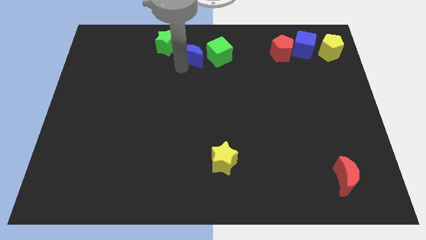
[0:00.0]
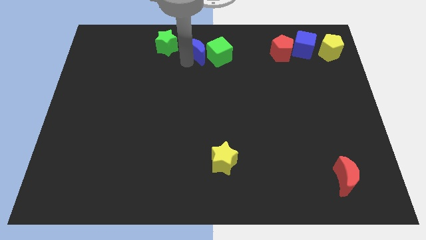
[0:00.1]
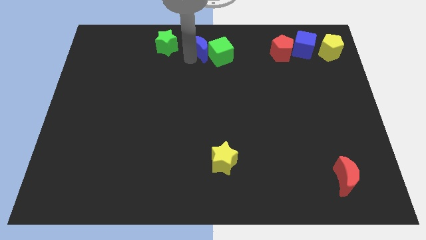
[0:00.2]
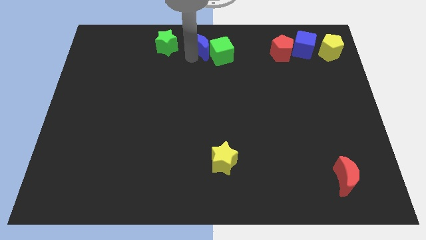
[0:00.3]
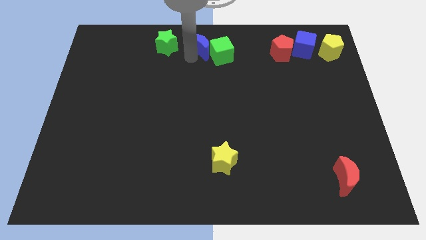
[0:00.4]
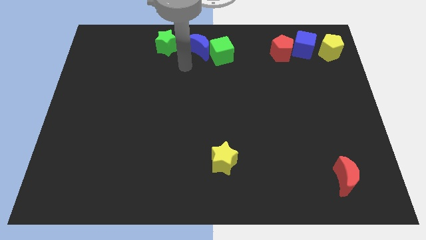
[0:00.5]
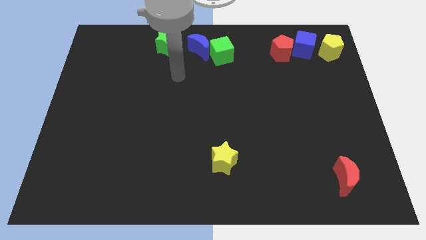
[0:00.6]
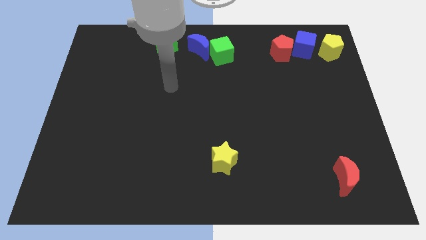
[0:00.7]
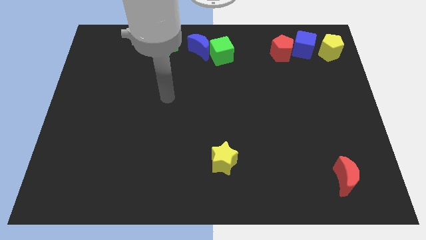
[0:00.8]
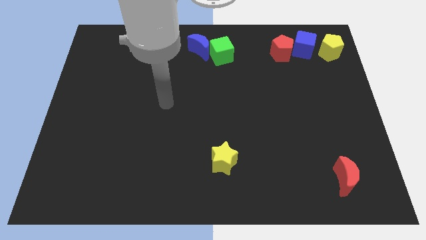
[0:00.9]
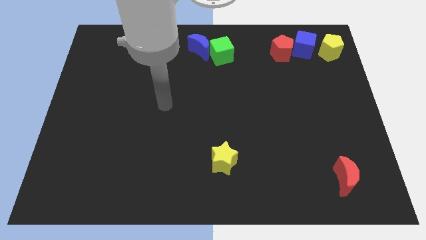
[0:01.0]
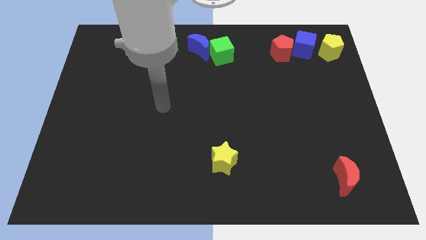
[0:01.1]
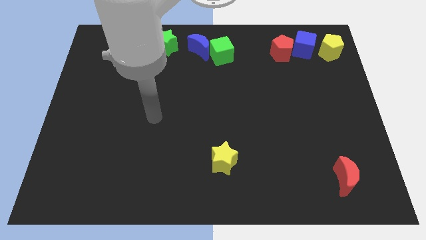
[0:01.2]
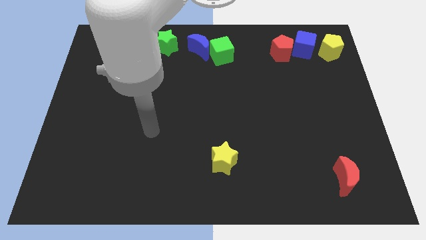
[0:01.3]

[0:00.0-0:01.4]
push the blue moon into the green cube

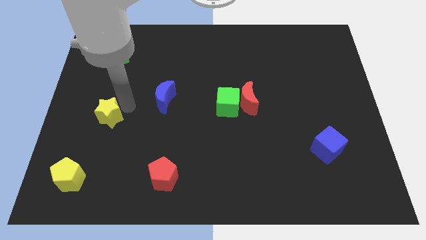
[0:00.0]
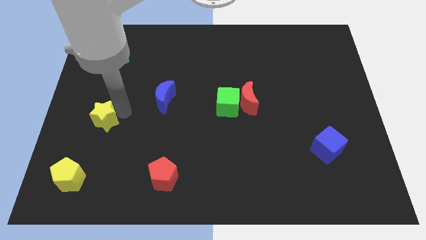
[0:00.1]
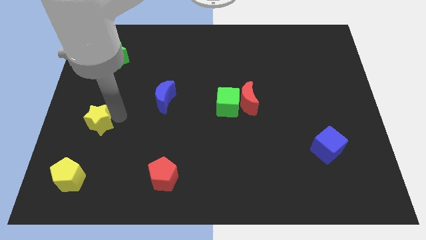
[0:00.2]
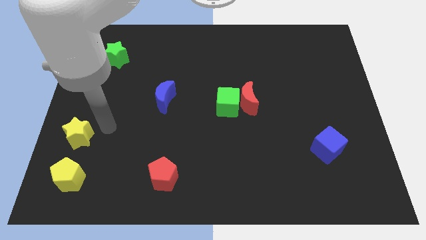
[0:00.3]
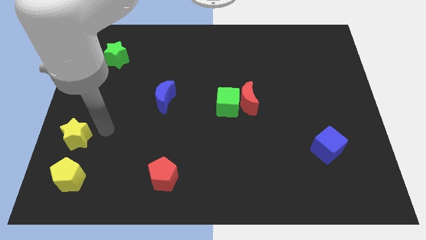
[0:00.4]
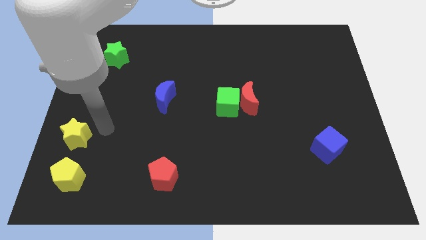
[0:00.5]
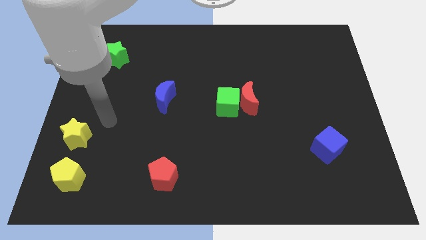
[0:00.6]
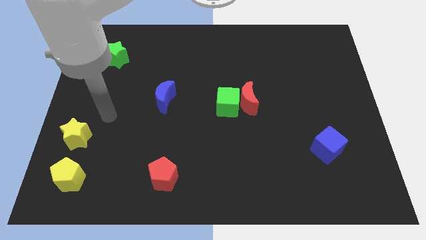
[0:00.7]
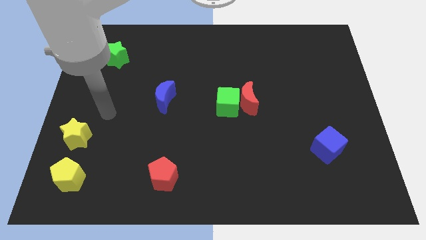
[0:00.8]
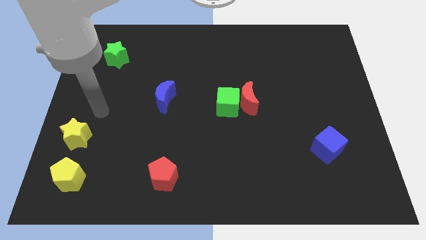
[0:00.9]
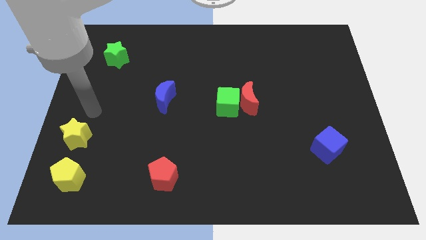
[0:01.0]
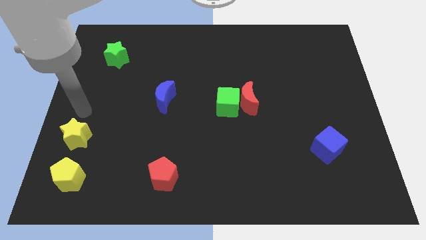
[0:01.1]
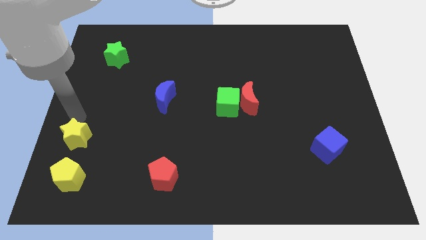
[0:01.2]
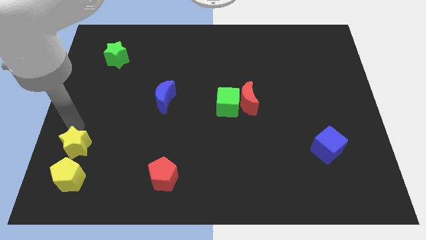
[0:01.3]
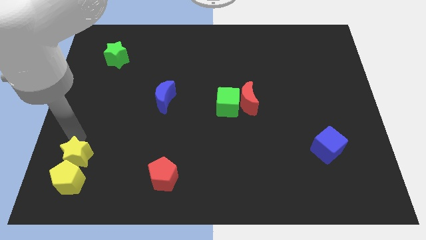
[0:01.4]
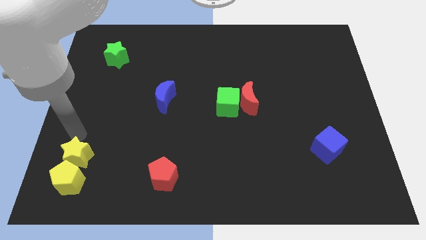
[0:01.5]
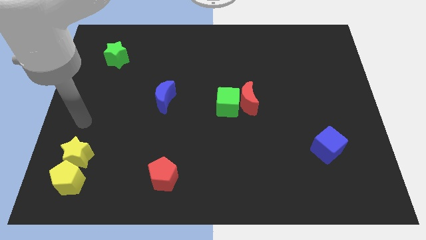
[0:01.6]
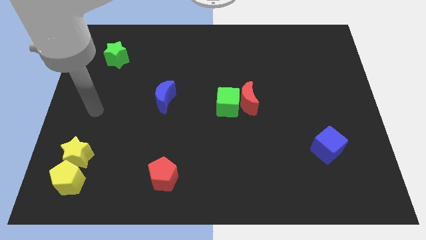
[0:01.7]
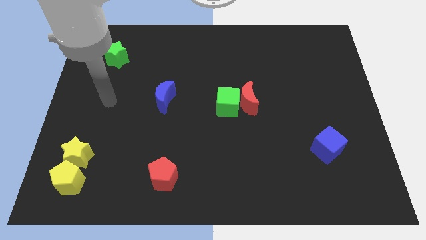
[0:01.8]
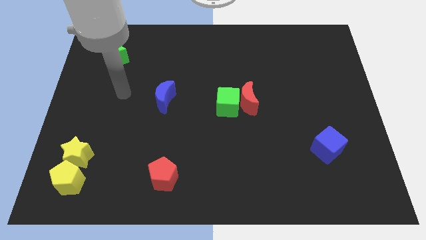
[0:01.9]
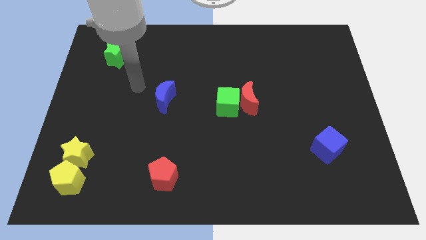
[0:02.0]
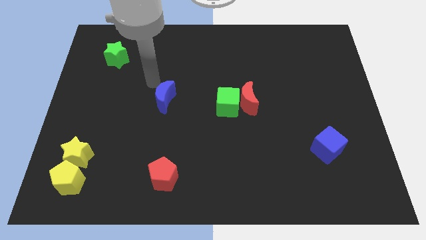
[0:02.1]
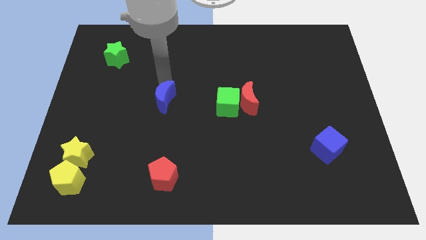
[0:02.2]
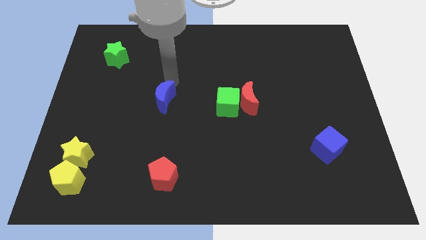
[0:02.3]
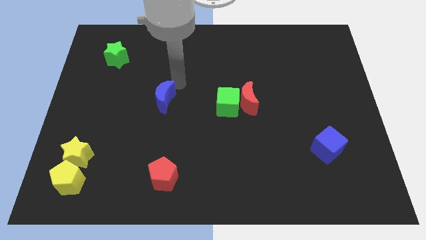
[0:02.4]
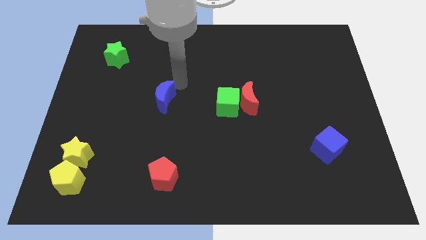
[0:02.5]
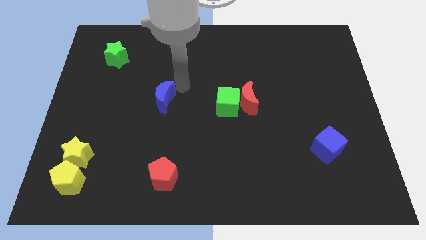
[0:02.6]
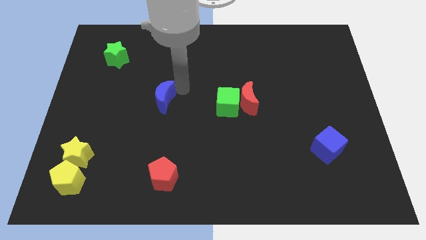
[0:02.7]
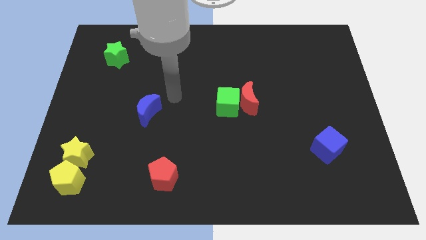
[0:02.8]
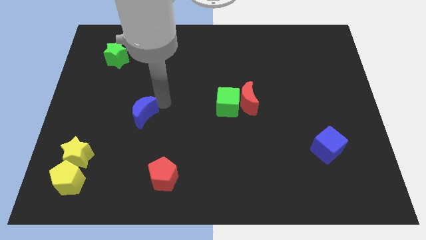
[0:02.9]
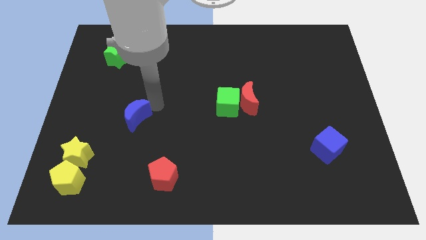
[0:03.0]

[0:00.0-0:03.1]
place the yellow star on top of the yellow pentagon

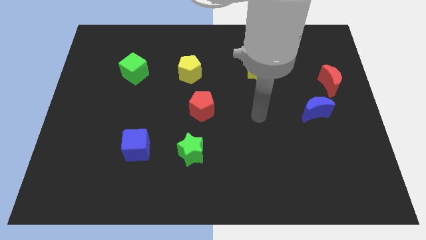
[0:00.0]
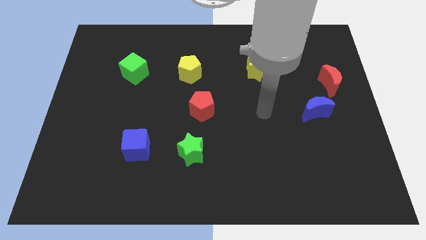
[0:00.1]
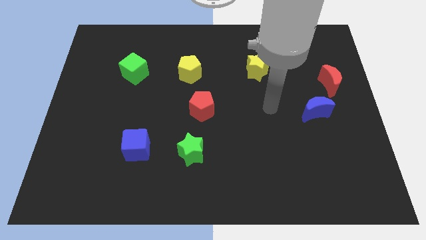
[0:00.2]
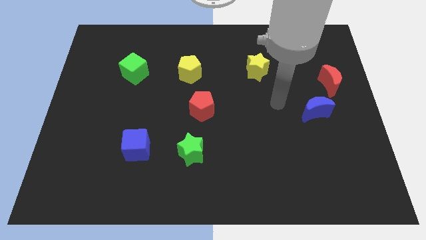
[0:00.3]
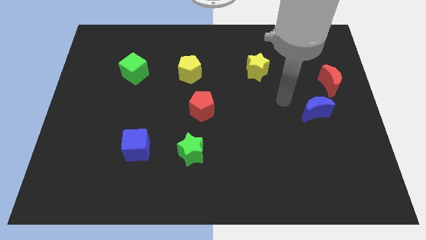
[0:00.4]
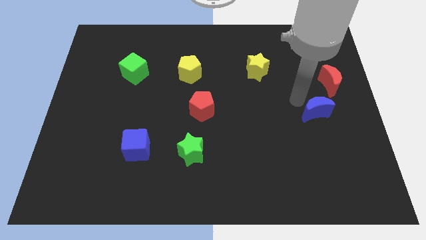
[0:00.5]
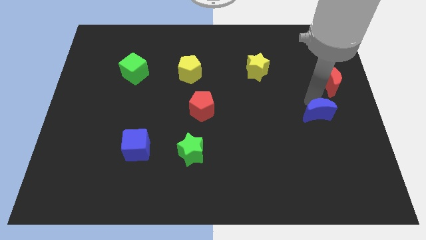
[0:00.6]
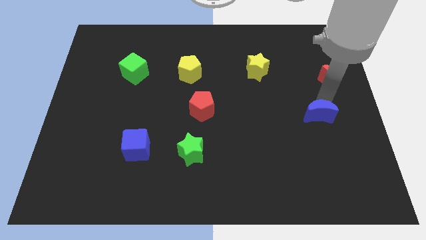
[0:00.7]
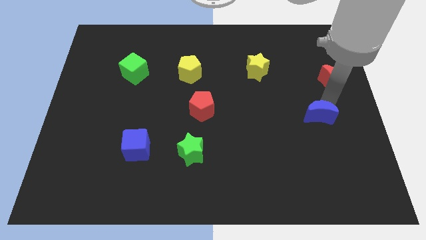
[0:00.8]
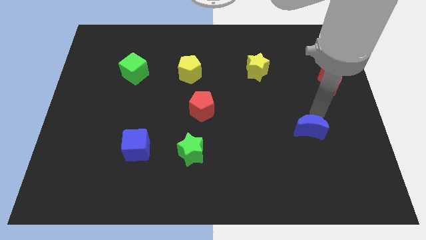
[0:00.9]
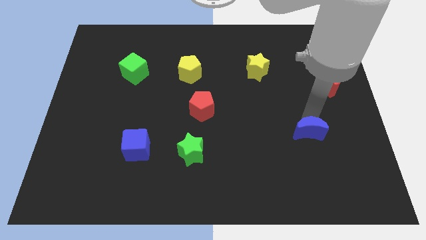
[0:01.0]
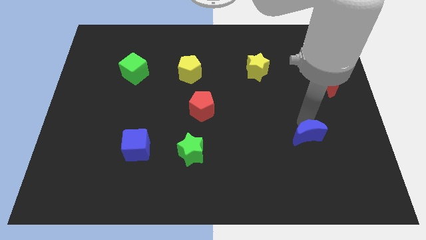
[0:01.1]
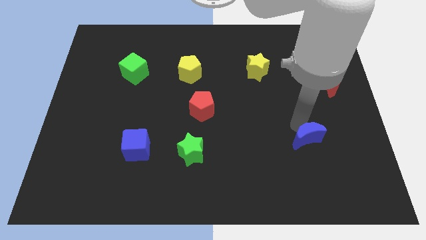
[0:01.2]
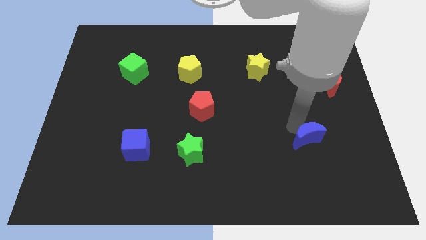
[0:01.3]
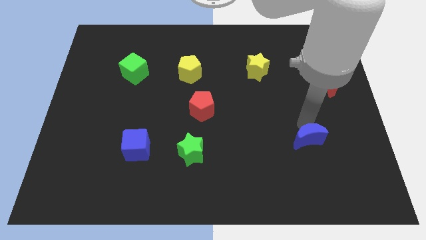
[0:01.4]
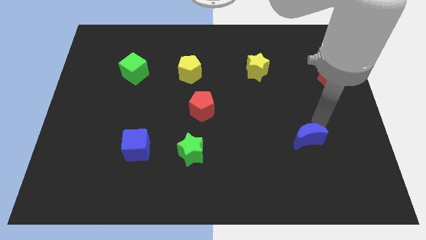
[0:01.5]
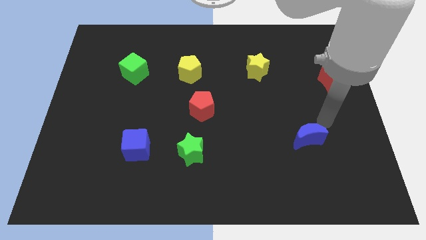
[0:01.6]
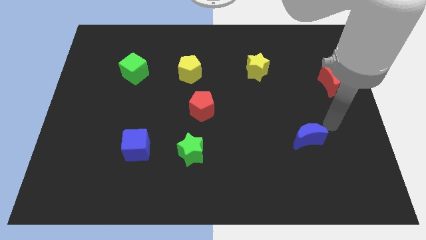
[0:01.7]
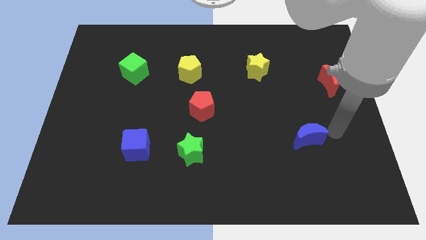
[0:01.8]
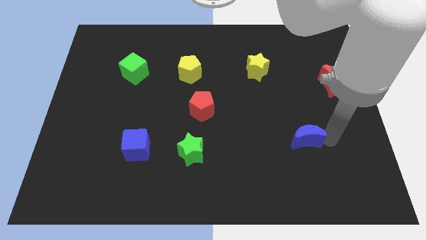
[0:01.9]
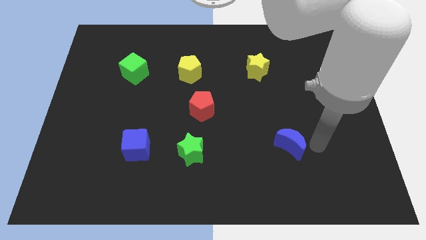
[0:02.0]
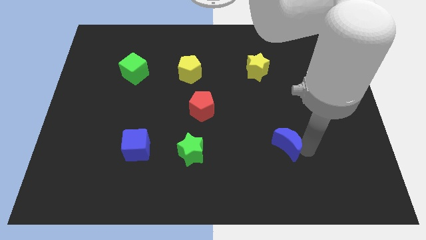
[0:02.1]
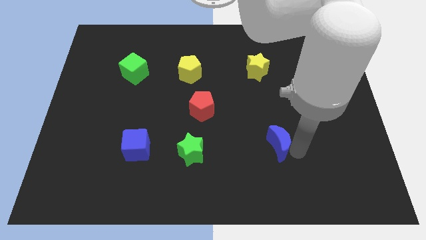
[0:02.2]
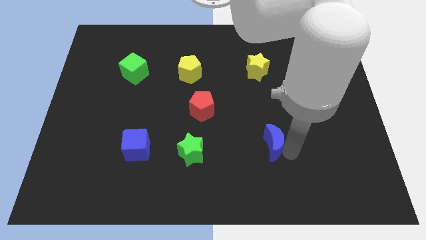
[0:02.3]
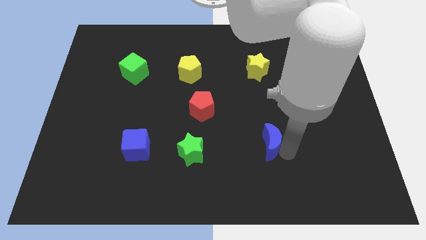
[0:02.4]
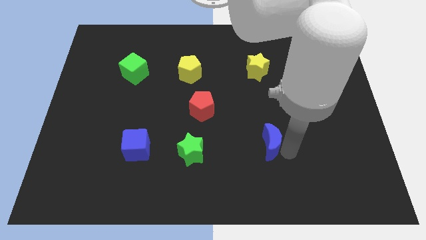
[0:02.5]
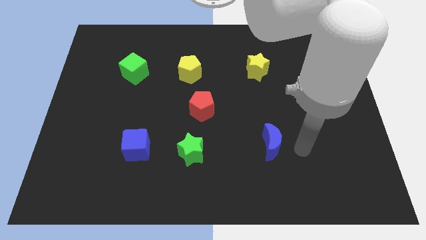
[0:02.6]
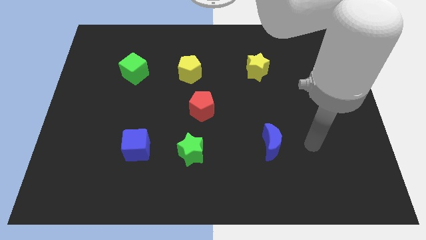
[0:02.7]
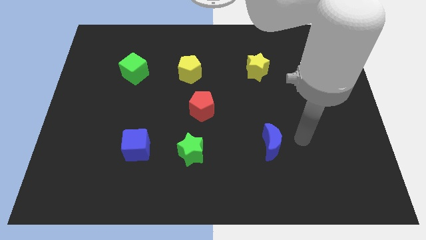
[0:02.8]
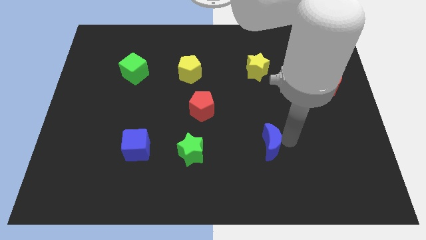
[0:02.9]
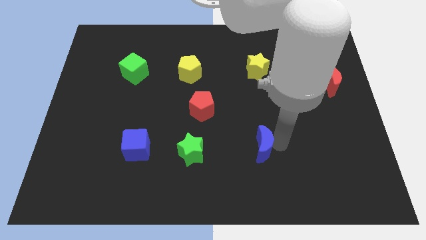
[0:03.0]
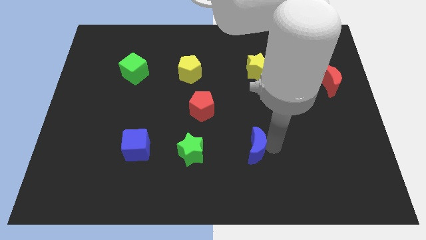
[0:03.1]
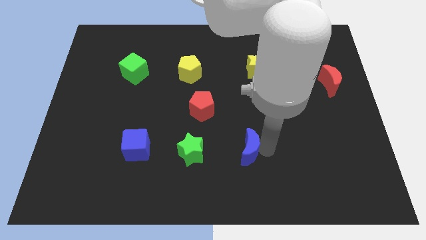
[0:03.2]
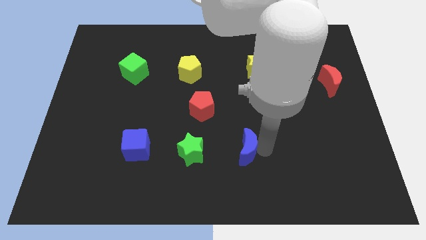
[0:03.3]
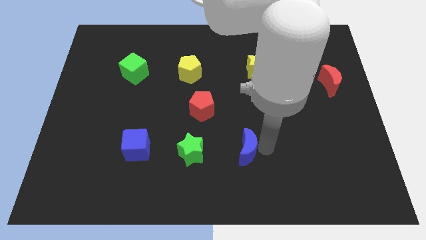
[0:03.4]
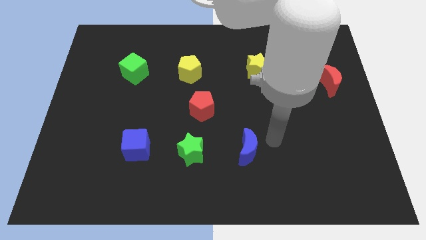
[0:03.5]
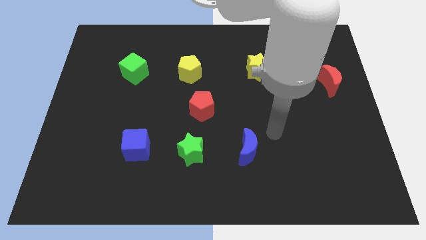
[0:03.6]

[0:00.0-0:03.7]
move the blue crescent close to the green star

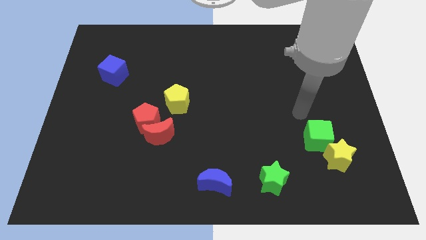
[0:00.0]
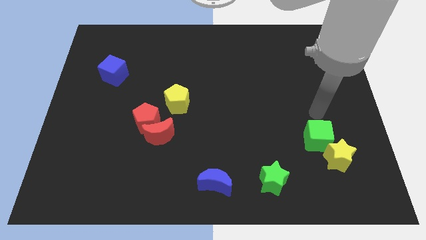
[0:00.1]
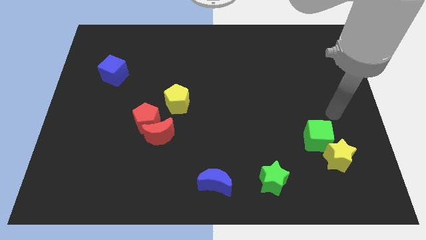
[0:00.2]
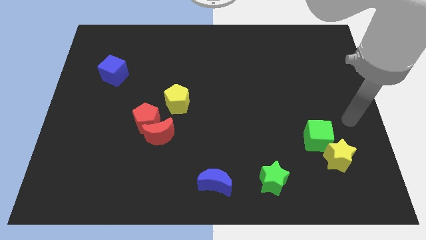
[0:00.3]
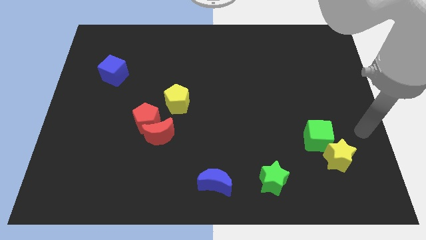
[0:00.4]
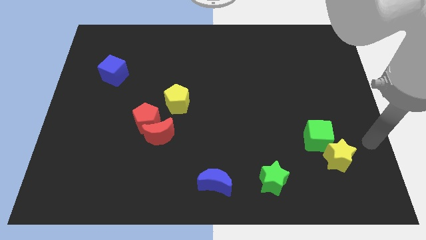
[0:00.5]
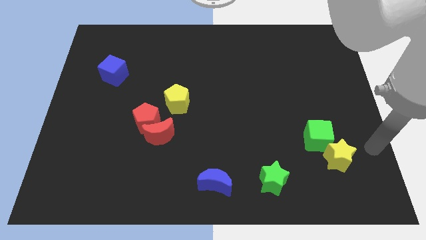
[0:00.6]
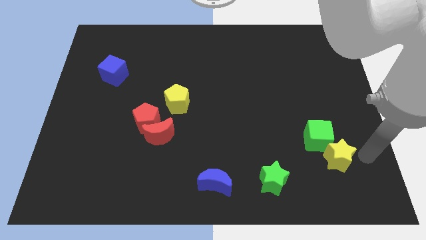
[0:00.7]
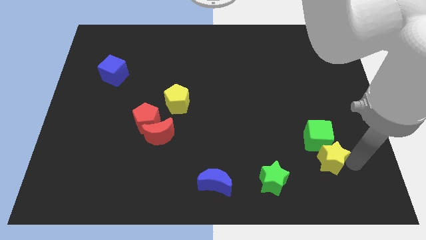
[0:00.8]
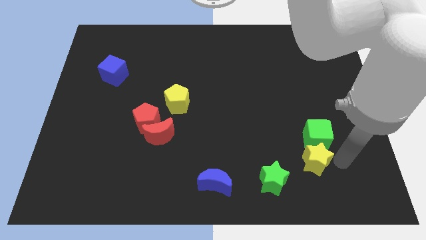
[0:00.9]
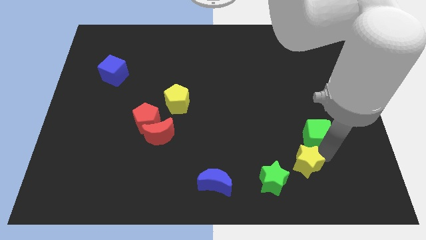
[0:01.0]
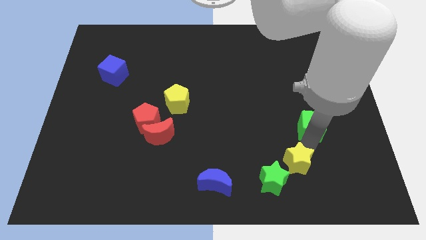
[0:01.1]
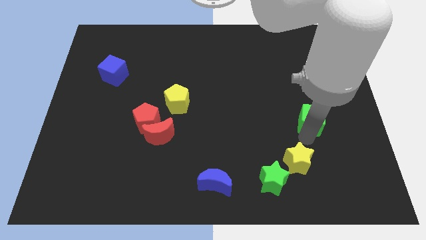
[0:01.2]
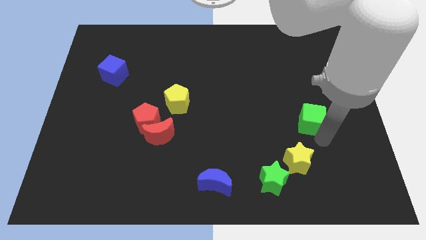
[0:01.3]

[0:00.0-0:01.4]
separate the yellow star and green cube
